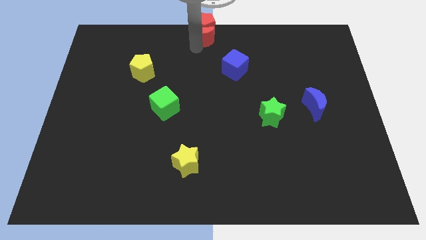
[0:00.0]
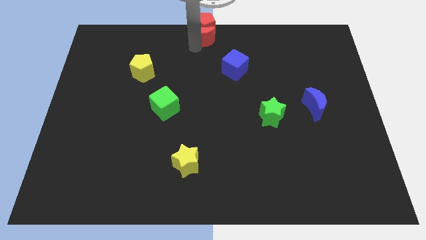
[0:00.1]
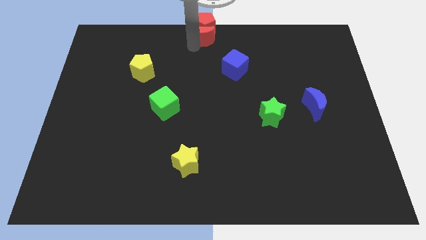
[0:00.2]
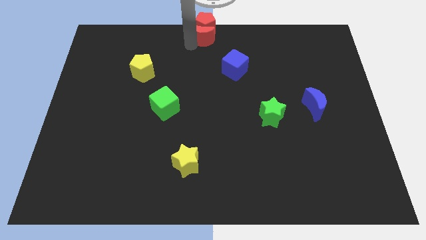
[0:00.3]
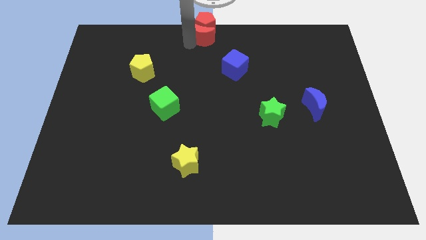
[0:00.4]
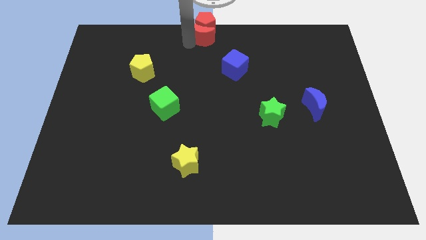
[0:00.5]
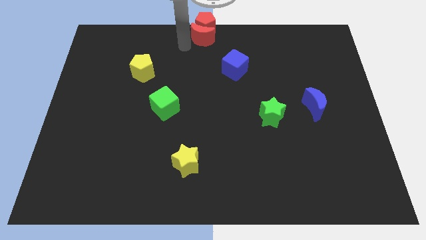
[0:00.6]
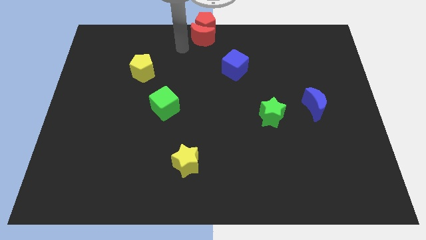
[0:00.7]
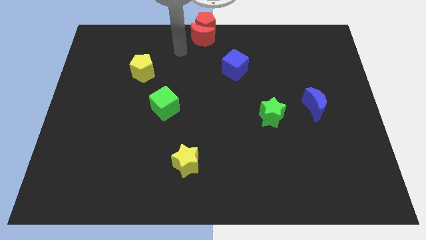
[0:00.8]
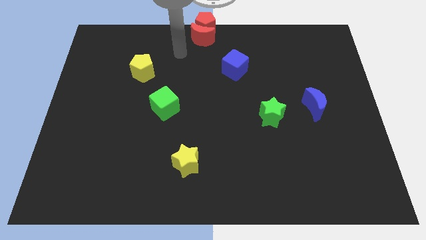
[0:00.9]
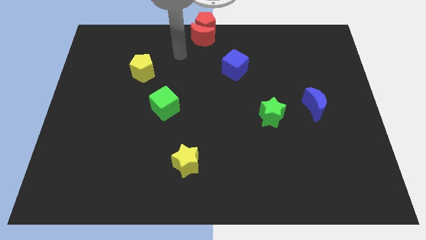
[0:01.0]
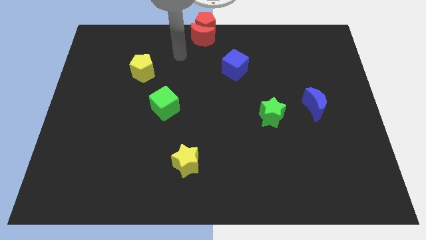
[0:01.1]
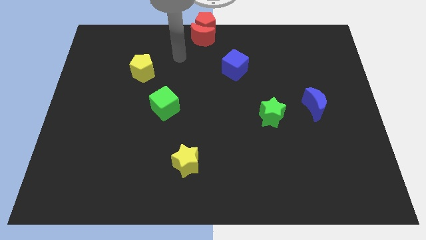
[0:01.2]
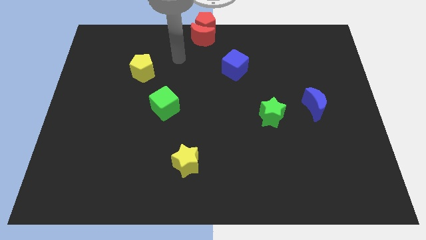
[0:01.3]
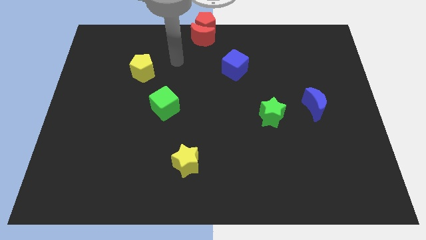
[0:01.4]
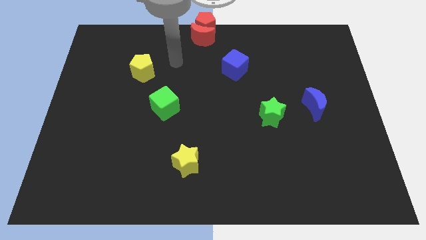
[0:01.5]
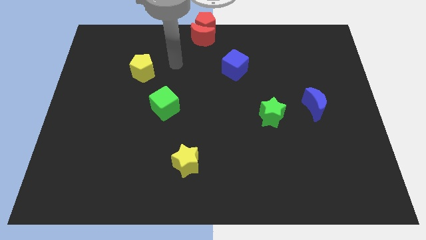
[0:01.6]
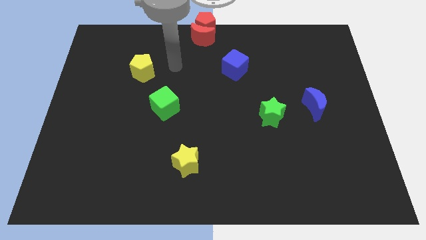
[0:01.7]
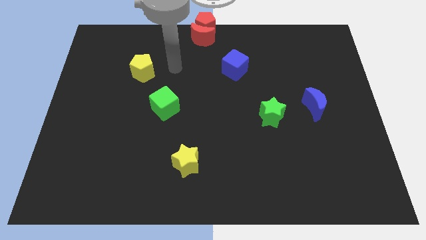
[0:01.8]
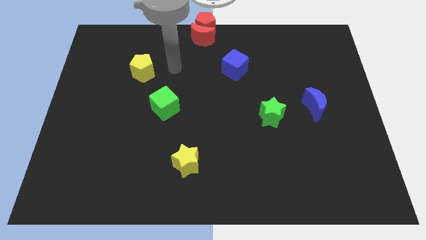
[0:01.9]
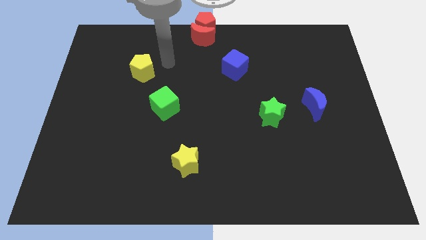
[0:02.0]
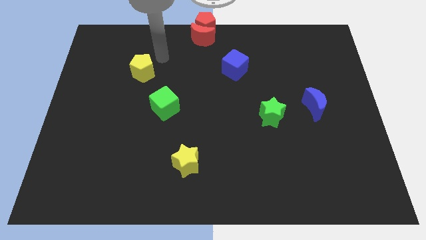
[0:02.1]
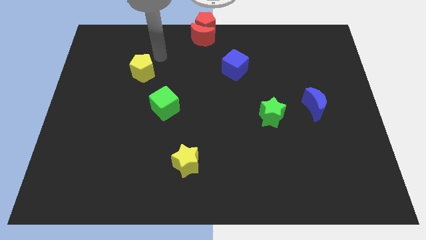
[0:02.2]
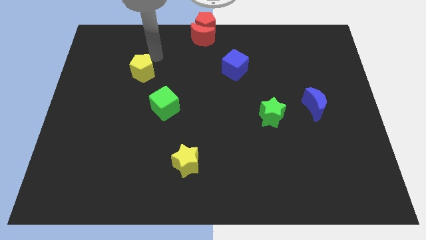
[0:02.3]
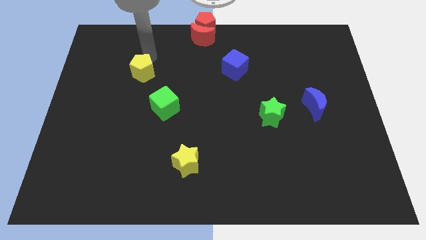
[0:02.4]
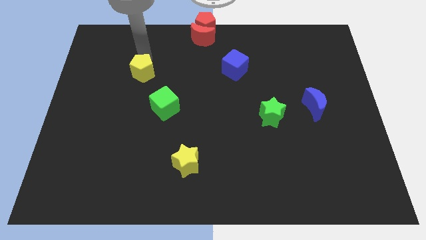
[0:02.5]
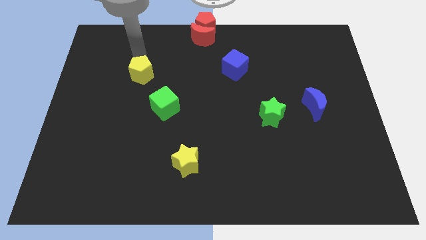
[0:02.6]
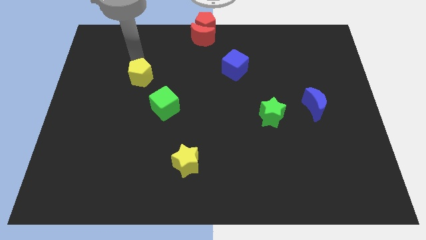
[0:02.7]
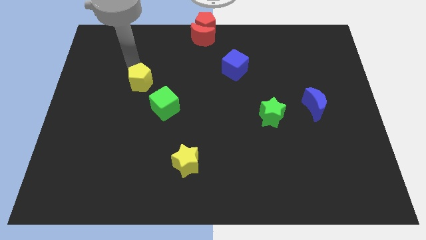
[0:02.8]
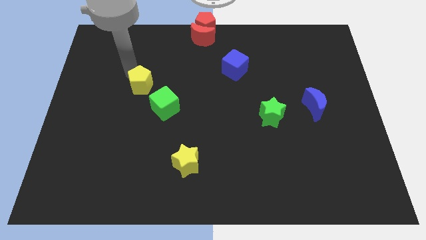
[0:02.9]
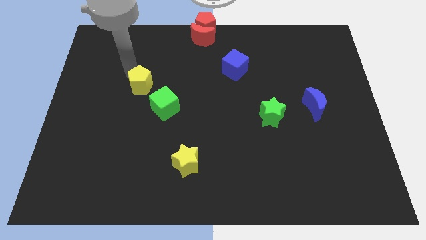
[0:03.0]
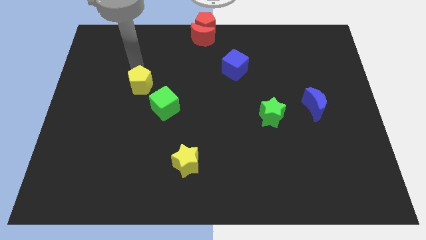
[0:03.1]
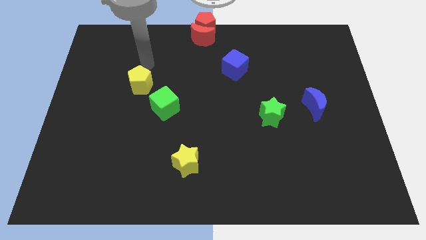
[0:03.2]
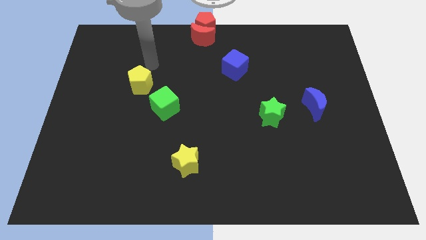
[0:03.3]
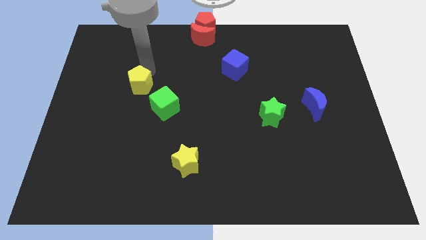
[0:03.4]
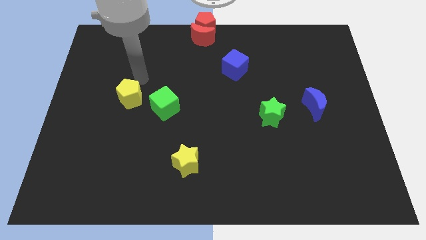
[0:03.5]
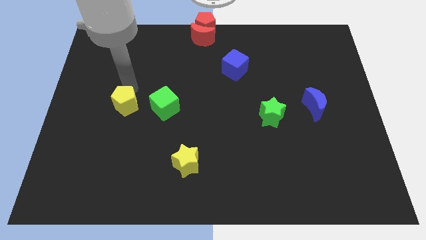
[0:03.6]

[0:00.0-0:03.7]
push the yellow pentagon to the left of the green cube

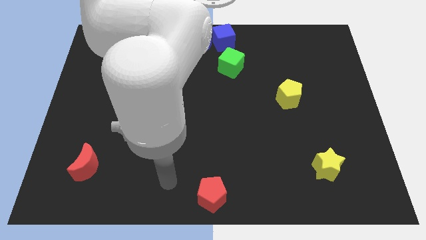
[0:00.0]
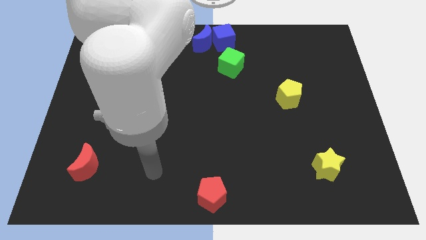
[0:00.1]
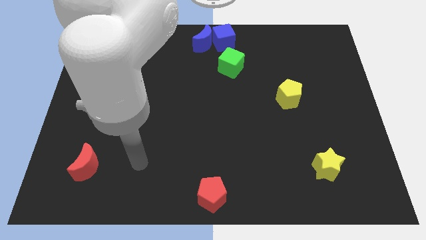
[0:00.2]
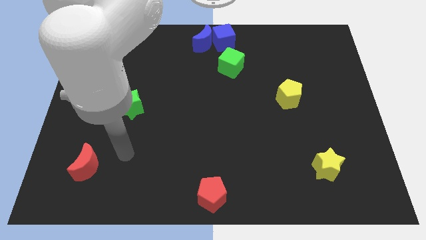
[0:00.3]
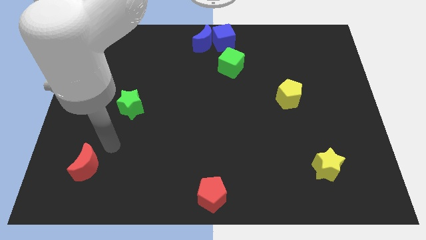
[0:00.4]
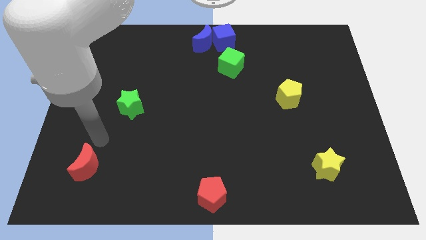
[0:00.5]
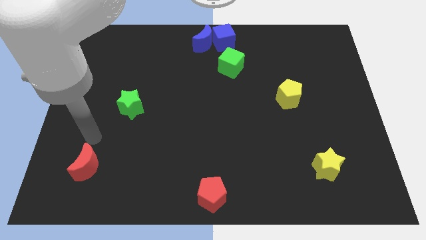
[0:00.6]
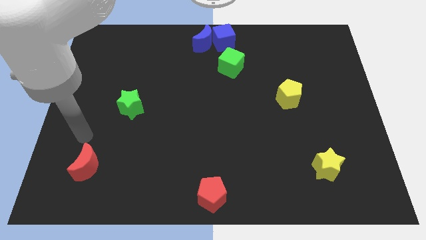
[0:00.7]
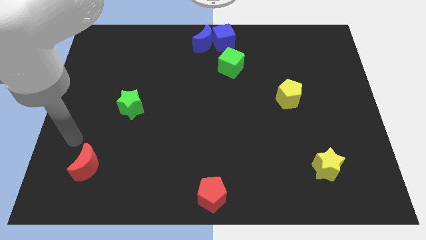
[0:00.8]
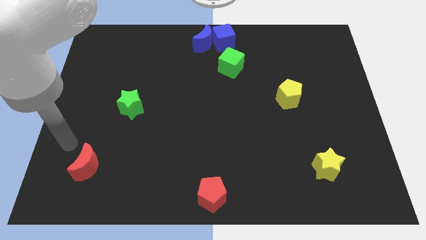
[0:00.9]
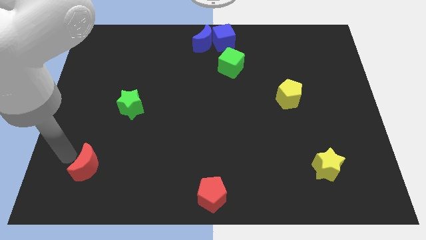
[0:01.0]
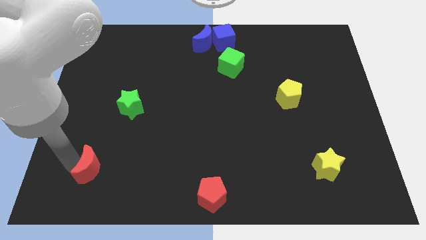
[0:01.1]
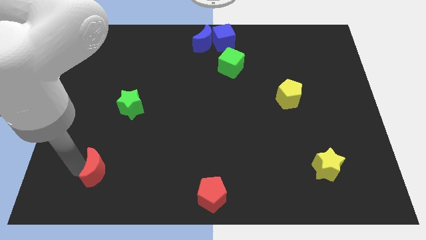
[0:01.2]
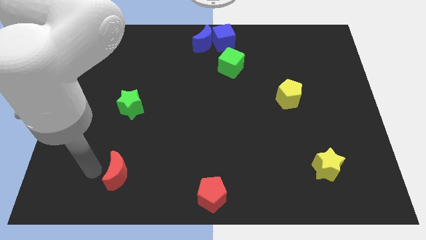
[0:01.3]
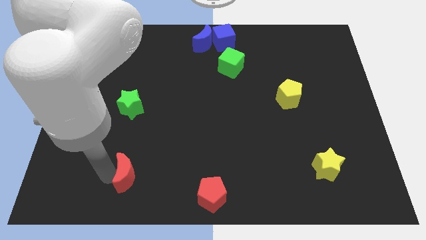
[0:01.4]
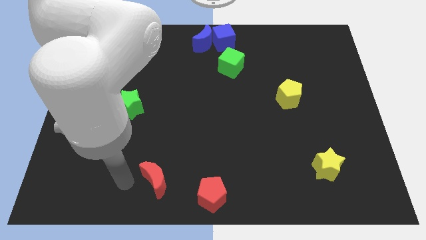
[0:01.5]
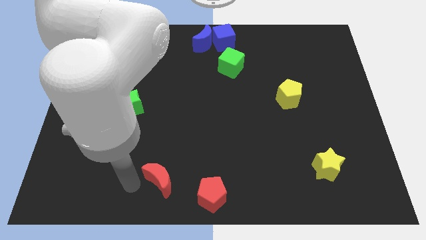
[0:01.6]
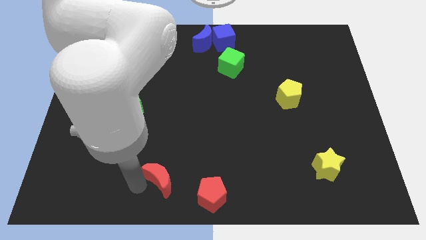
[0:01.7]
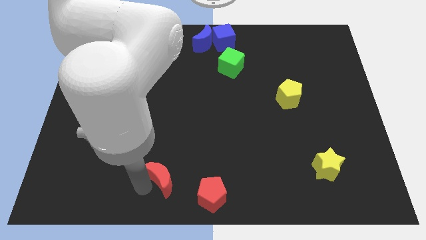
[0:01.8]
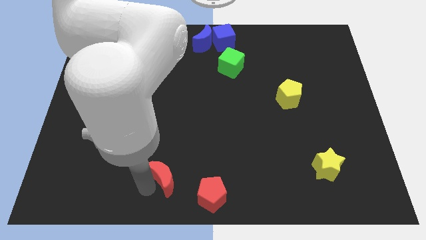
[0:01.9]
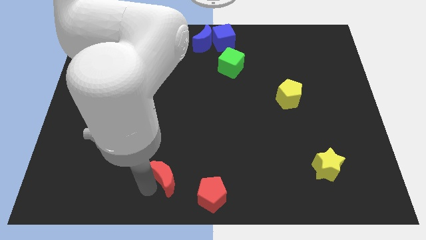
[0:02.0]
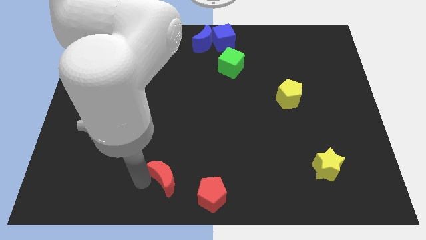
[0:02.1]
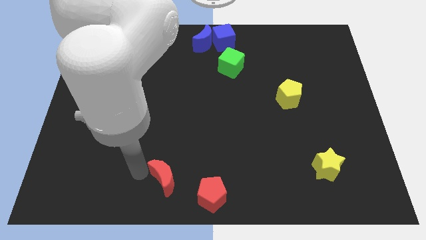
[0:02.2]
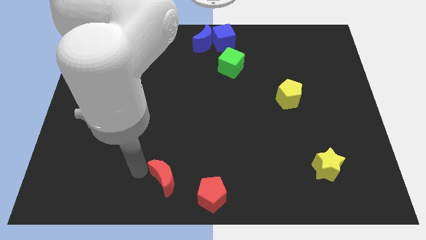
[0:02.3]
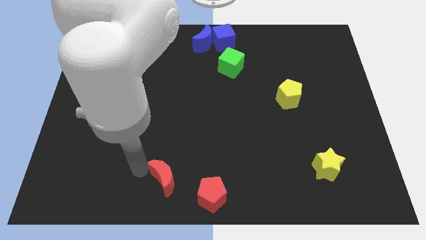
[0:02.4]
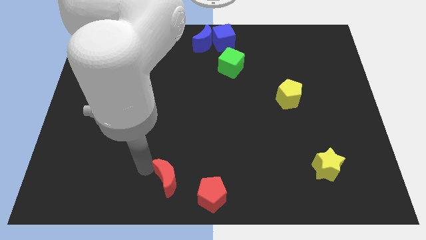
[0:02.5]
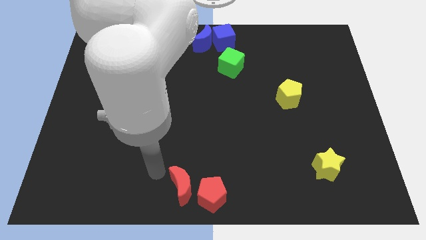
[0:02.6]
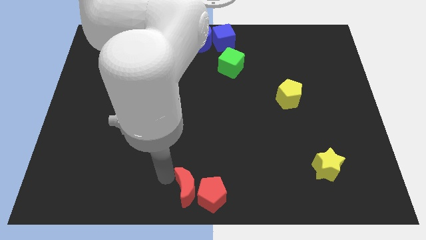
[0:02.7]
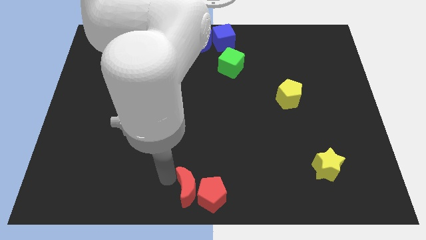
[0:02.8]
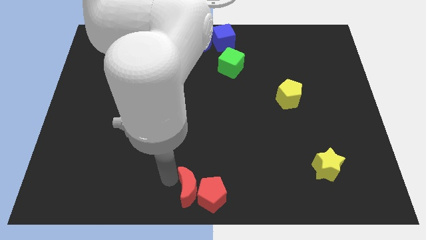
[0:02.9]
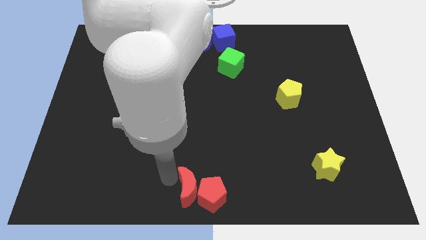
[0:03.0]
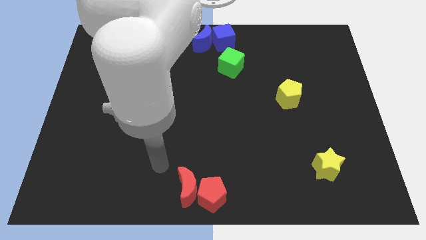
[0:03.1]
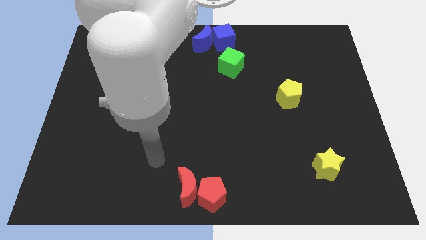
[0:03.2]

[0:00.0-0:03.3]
place the red moon into red pentagon to the left

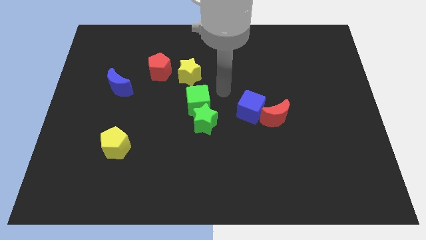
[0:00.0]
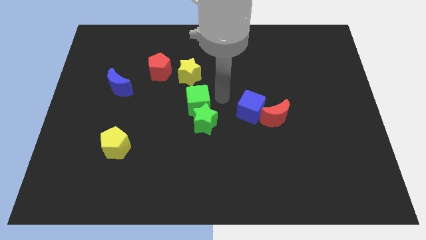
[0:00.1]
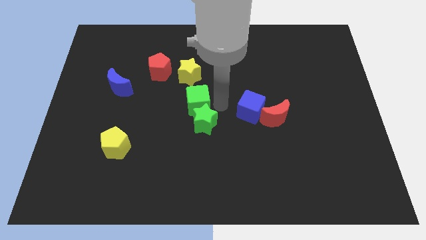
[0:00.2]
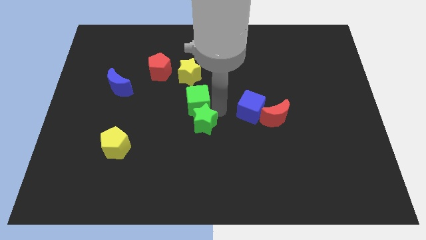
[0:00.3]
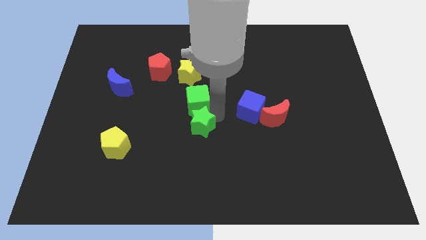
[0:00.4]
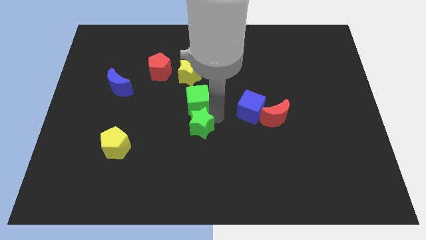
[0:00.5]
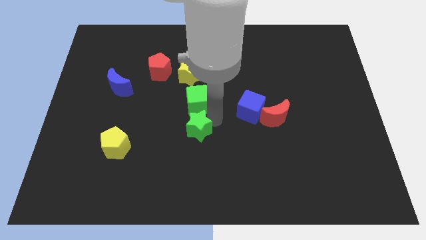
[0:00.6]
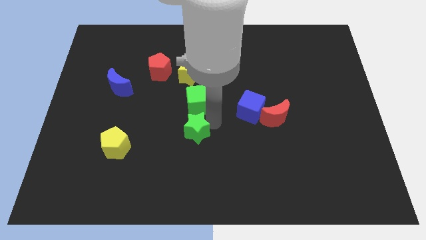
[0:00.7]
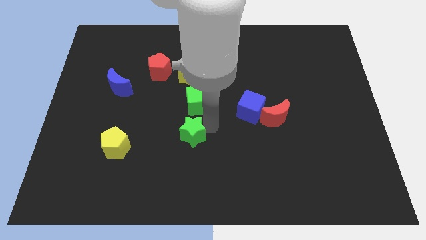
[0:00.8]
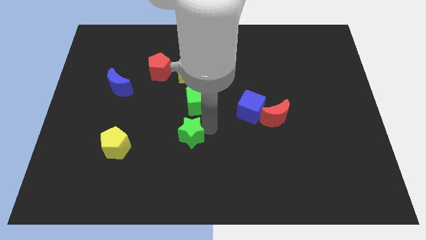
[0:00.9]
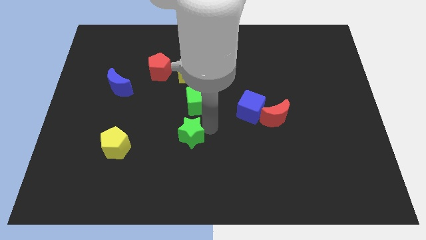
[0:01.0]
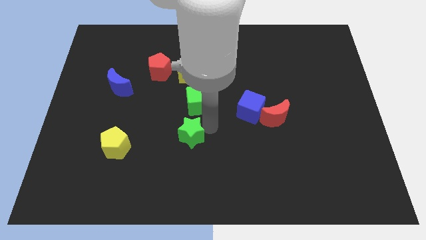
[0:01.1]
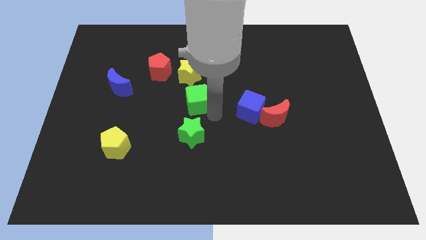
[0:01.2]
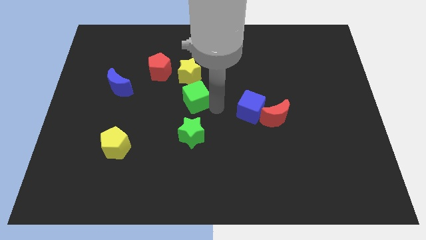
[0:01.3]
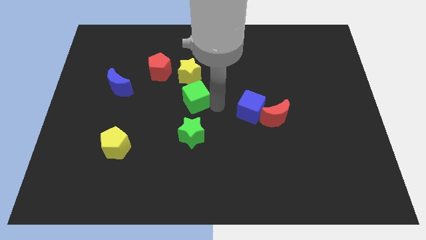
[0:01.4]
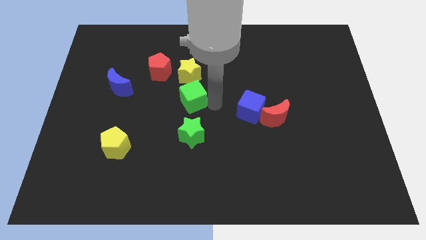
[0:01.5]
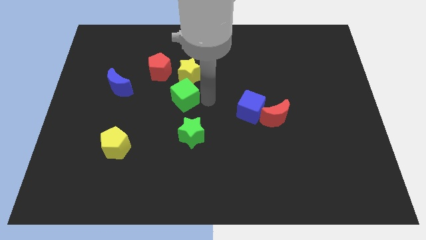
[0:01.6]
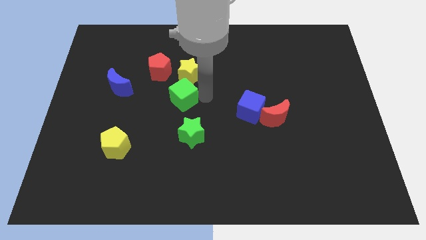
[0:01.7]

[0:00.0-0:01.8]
separate the green blocks from each other

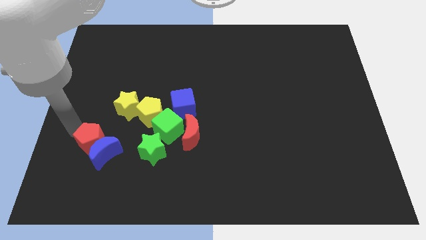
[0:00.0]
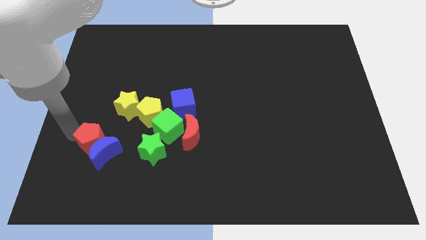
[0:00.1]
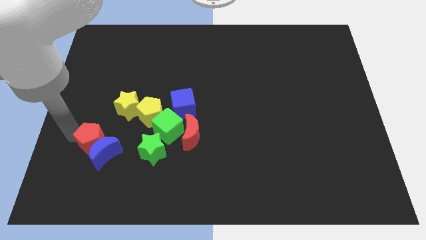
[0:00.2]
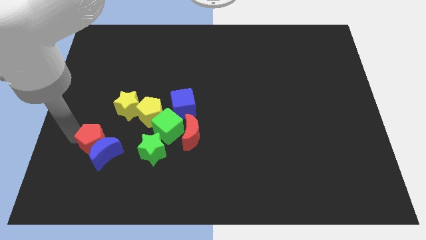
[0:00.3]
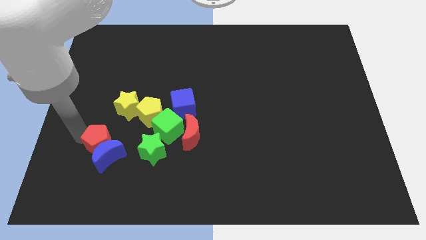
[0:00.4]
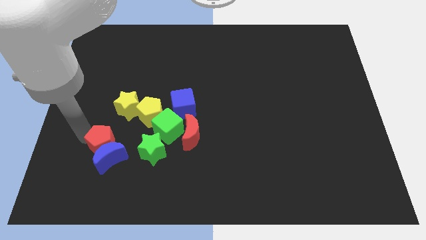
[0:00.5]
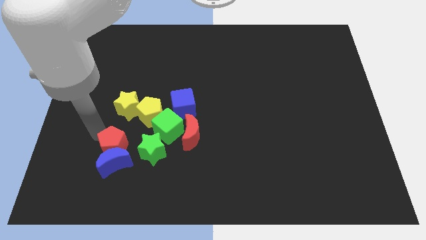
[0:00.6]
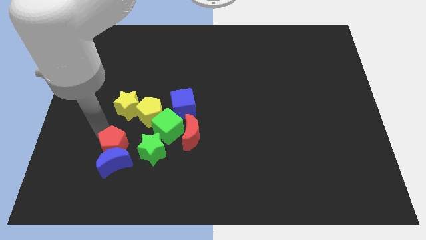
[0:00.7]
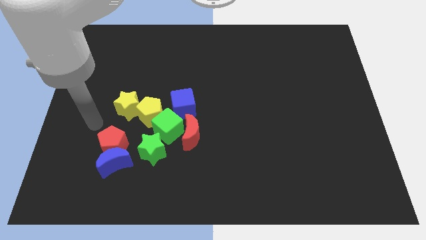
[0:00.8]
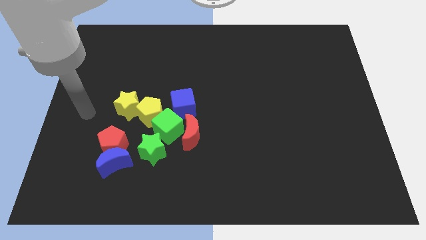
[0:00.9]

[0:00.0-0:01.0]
put the red pentagon and blue crescent to the left of green star
